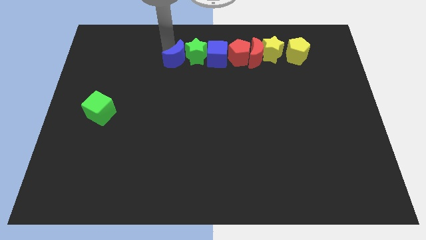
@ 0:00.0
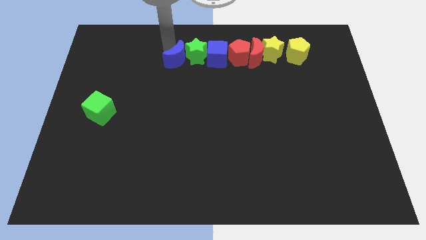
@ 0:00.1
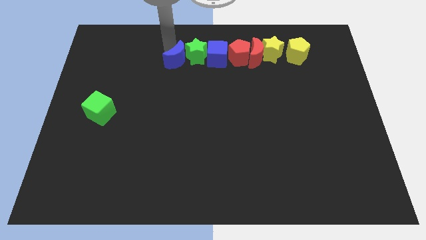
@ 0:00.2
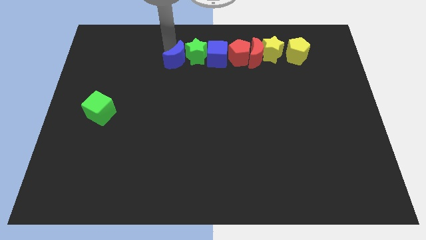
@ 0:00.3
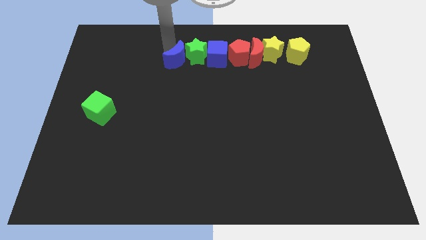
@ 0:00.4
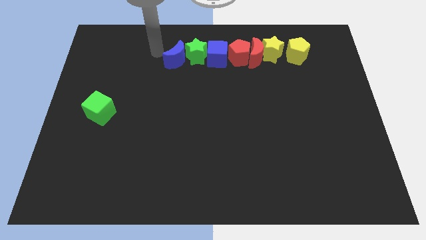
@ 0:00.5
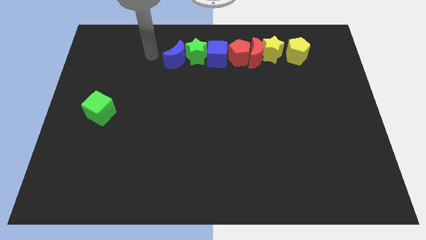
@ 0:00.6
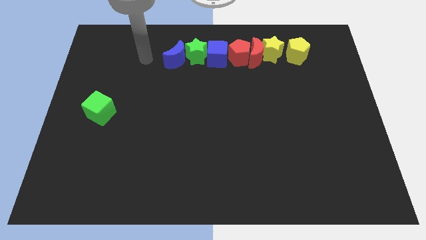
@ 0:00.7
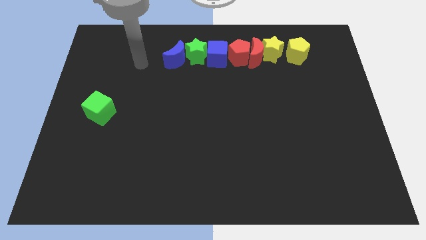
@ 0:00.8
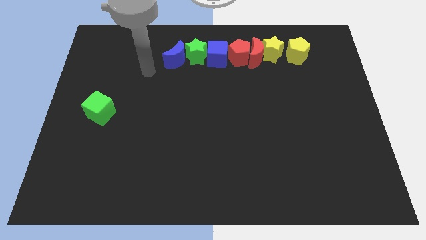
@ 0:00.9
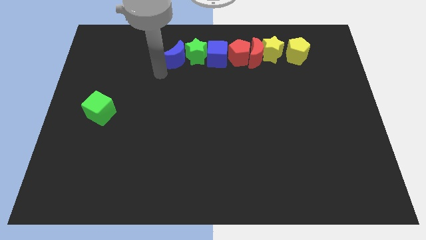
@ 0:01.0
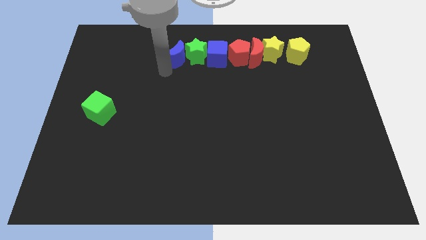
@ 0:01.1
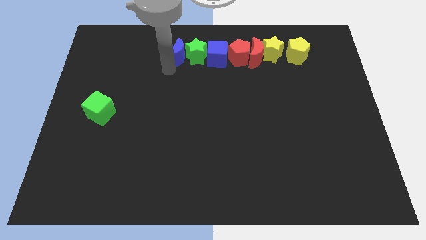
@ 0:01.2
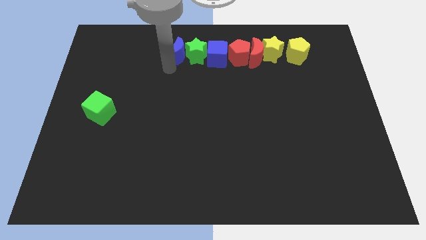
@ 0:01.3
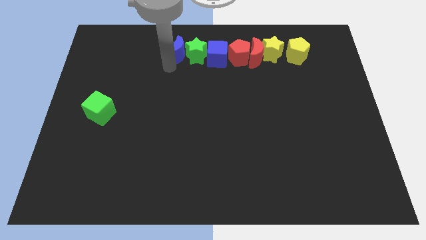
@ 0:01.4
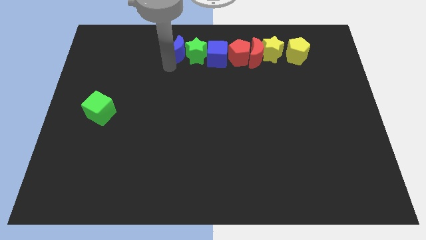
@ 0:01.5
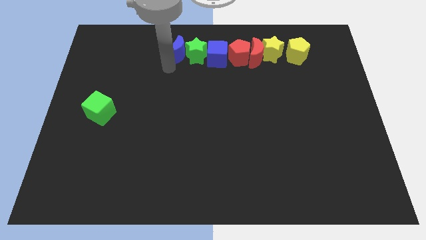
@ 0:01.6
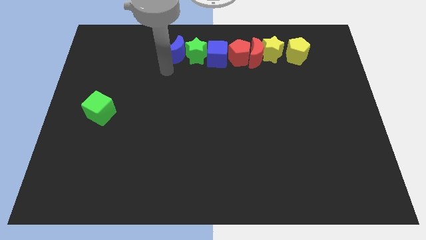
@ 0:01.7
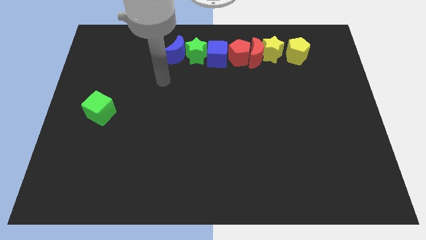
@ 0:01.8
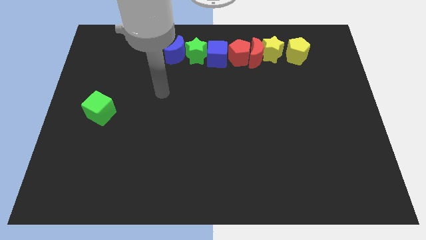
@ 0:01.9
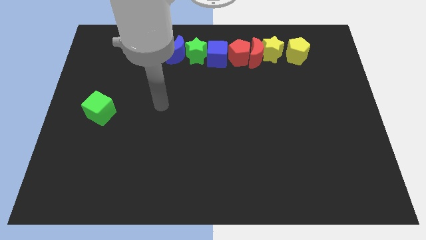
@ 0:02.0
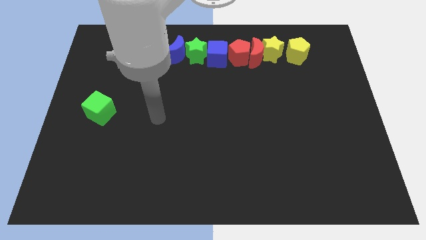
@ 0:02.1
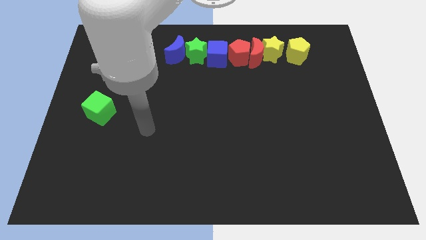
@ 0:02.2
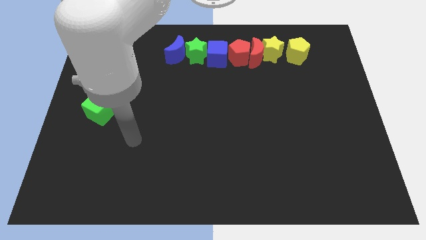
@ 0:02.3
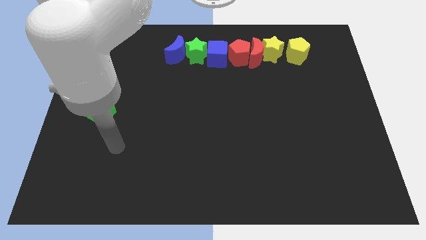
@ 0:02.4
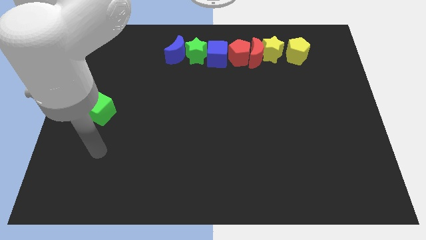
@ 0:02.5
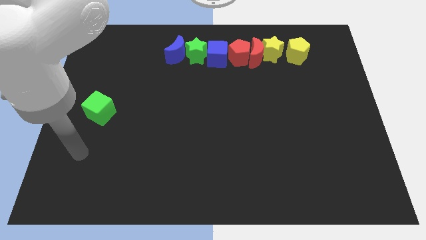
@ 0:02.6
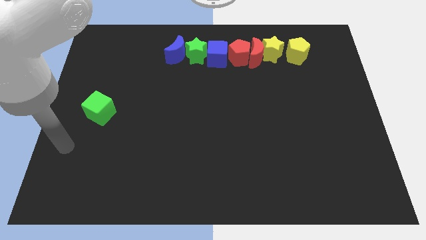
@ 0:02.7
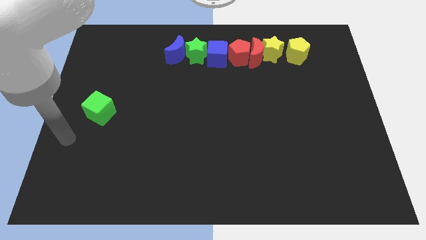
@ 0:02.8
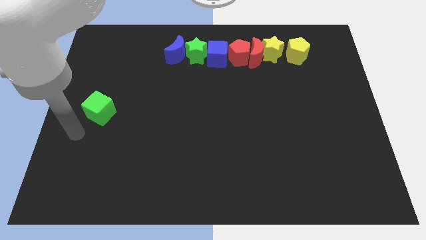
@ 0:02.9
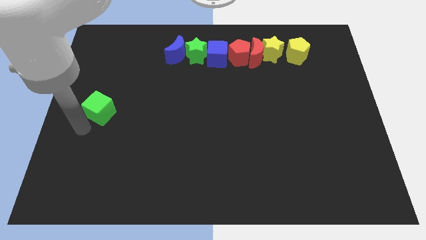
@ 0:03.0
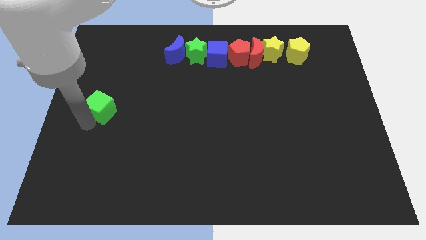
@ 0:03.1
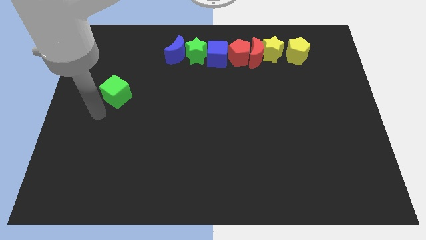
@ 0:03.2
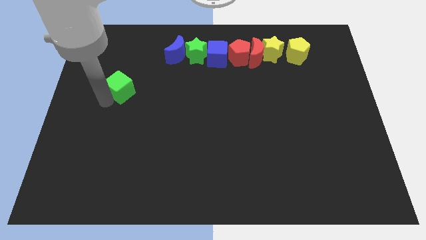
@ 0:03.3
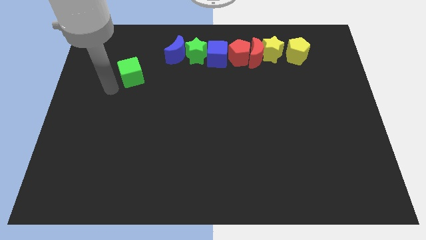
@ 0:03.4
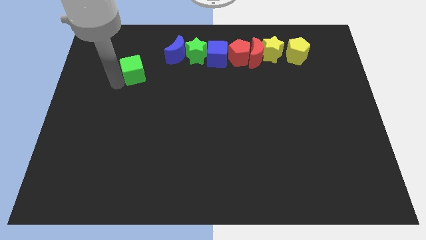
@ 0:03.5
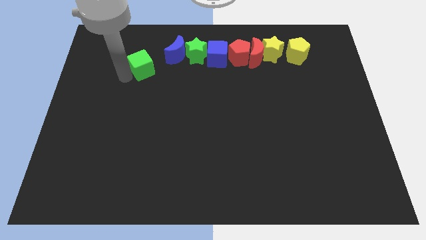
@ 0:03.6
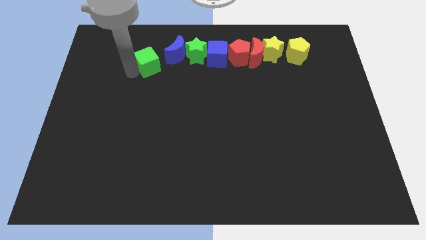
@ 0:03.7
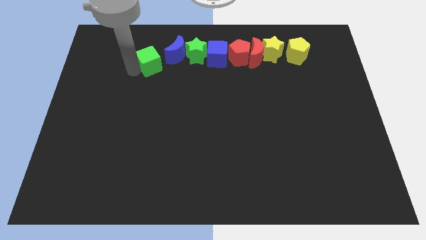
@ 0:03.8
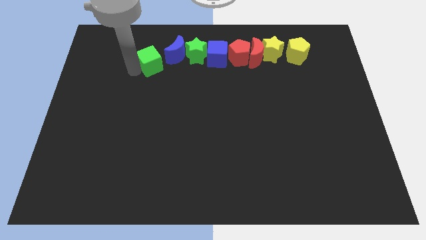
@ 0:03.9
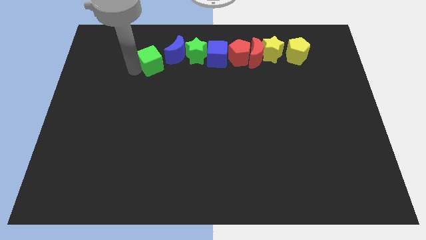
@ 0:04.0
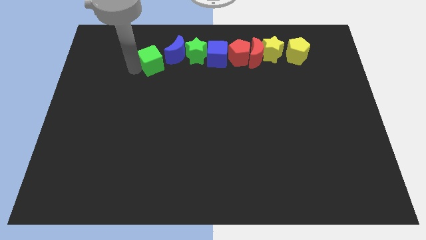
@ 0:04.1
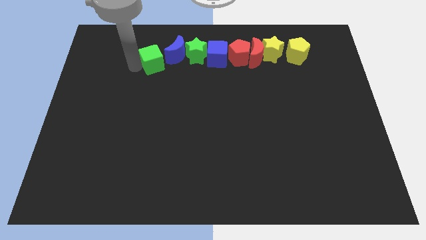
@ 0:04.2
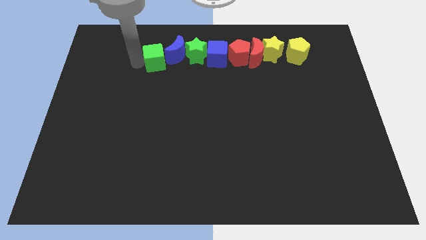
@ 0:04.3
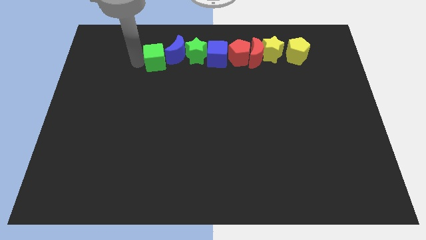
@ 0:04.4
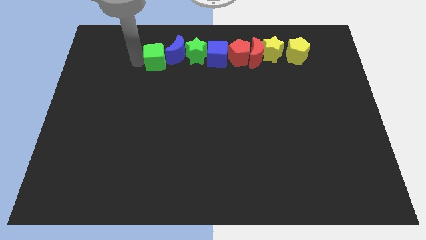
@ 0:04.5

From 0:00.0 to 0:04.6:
place the green cube towards the left side of the blue crescent

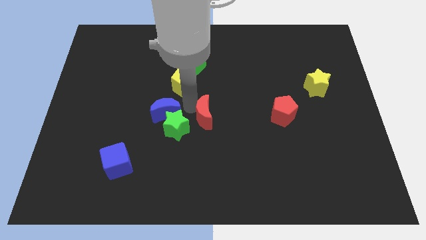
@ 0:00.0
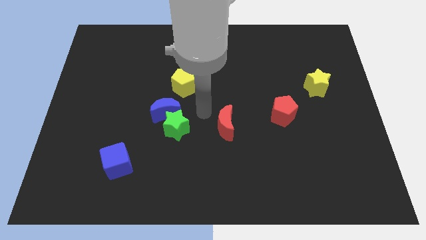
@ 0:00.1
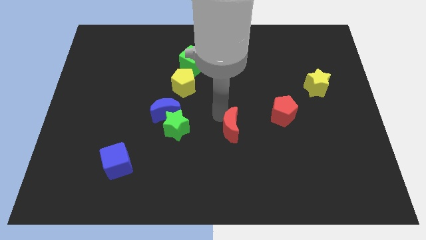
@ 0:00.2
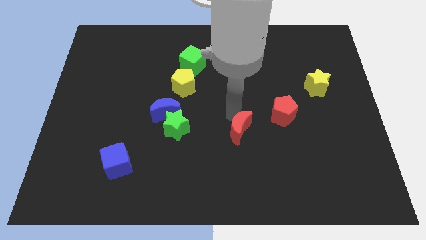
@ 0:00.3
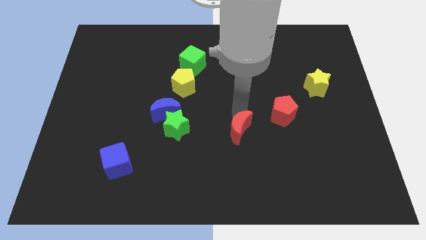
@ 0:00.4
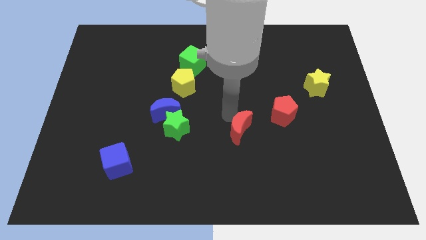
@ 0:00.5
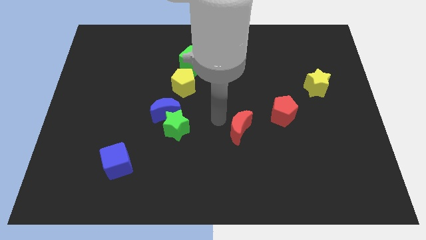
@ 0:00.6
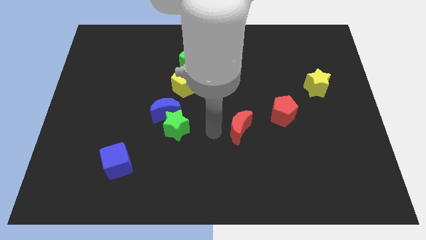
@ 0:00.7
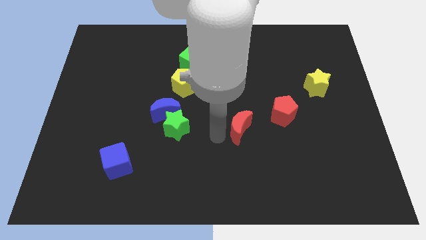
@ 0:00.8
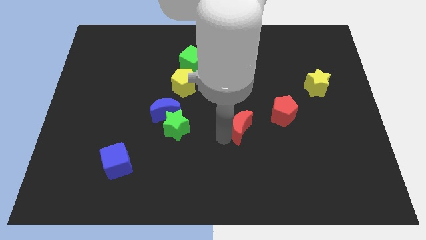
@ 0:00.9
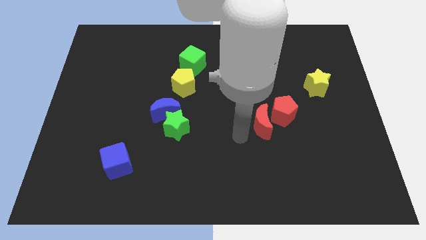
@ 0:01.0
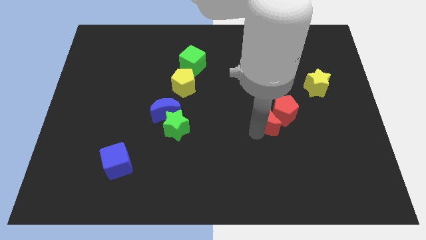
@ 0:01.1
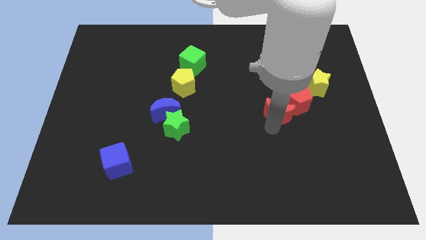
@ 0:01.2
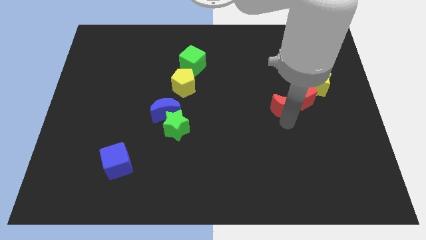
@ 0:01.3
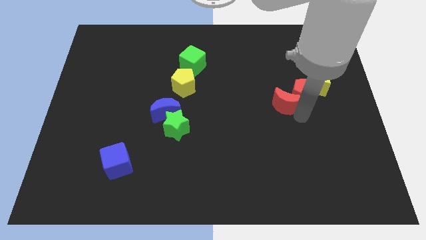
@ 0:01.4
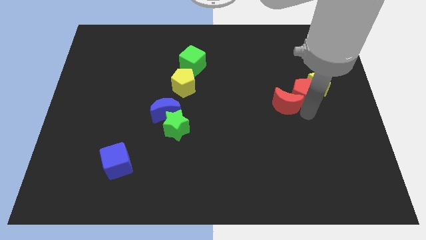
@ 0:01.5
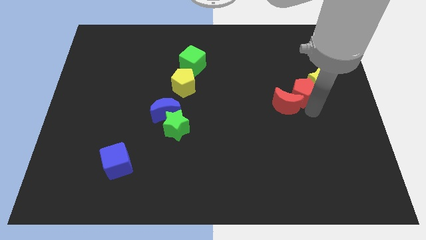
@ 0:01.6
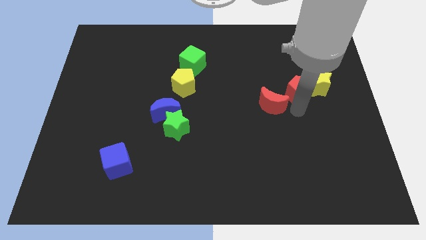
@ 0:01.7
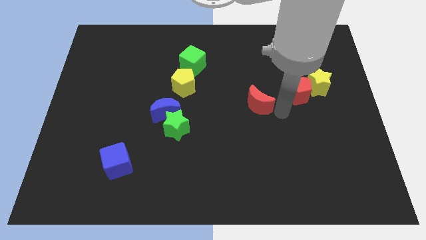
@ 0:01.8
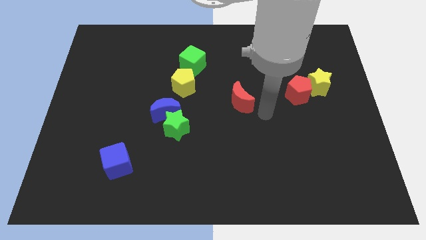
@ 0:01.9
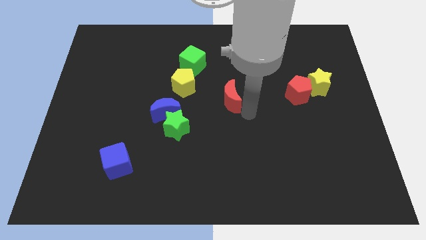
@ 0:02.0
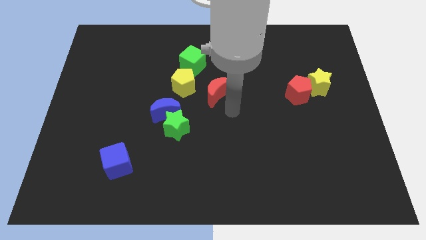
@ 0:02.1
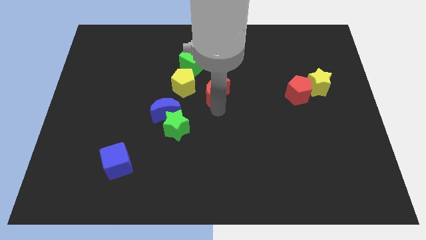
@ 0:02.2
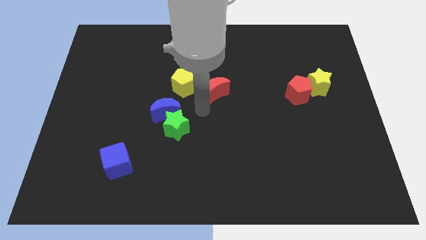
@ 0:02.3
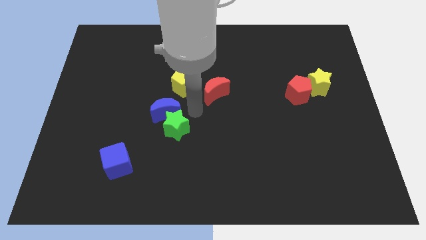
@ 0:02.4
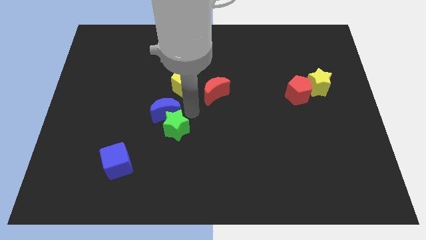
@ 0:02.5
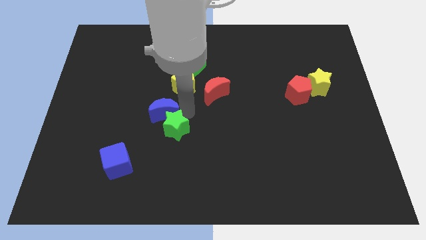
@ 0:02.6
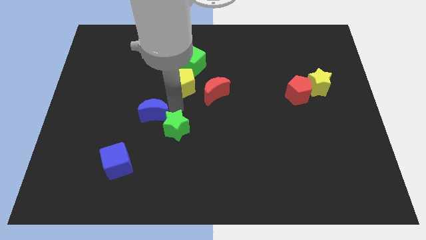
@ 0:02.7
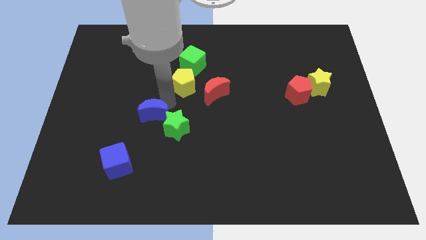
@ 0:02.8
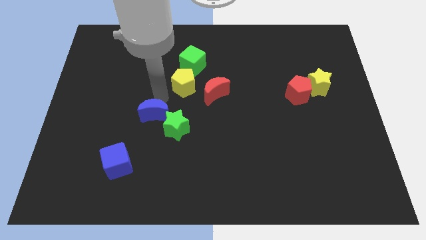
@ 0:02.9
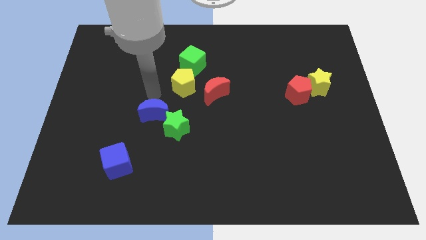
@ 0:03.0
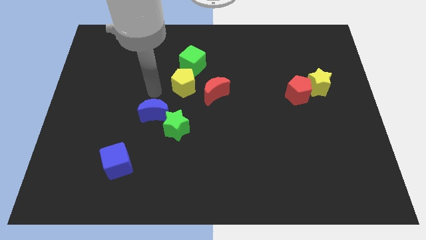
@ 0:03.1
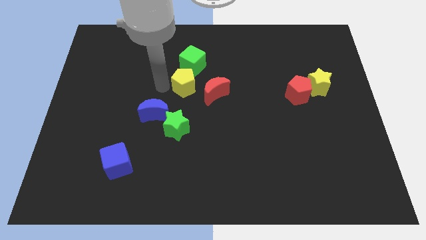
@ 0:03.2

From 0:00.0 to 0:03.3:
push the red moon to the right side of the yellow pentagon

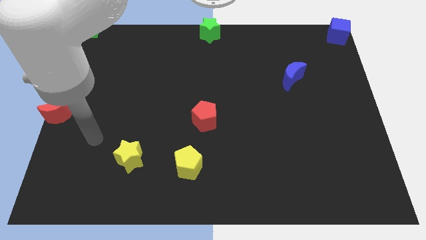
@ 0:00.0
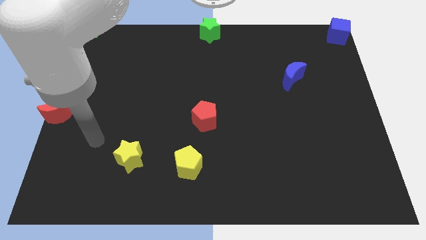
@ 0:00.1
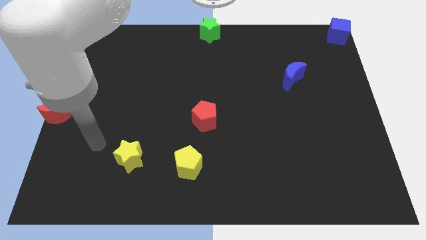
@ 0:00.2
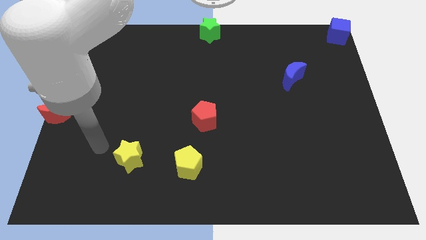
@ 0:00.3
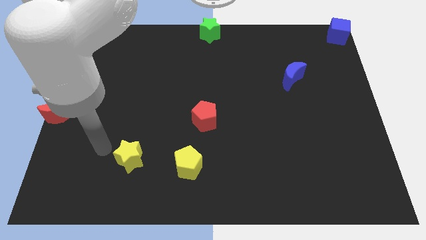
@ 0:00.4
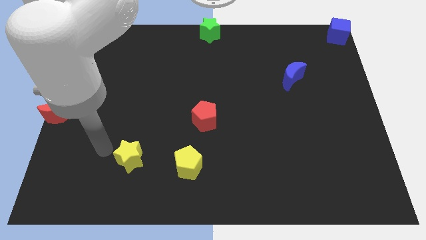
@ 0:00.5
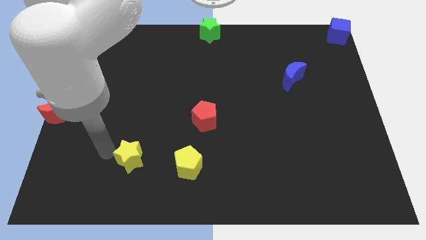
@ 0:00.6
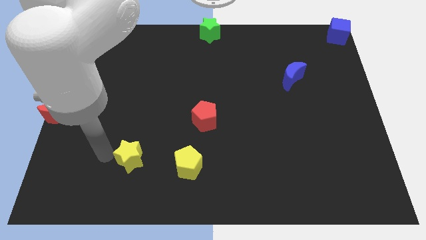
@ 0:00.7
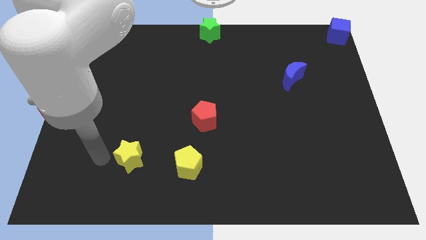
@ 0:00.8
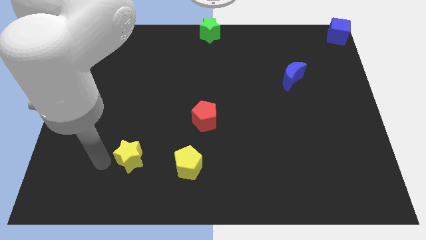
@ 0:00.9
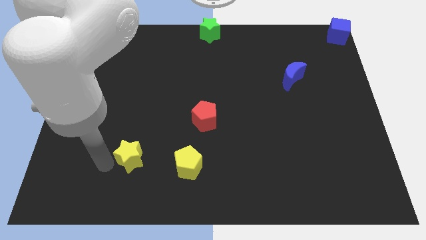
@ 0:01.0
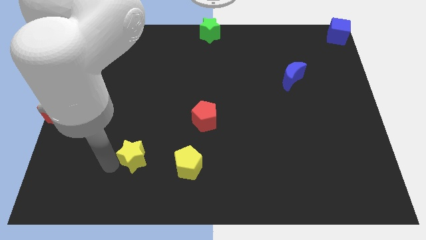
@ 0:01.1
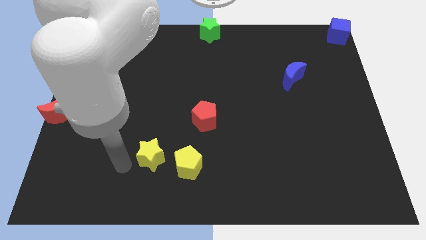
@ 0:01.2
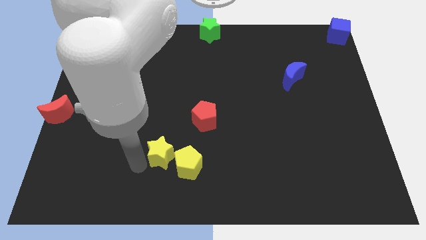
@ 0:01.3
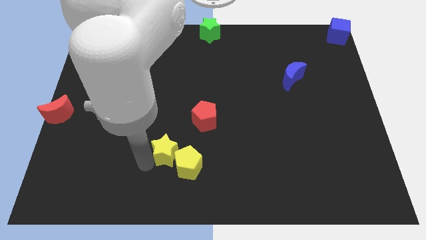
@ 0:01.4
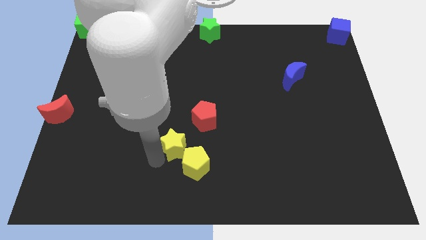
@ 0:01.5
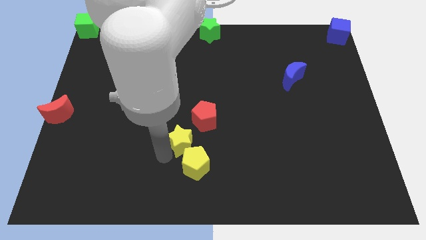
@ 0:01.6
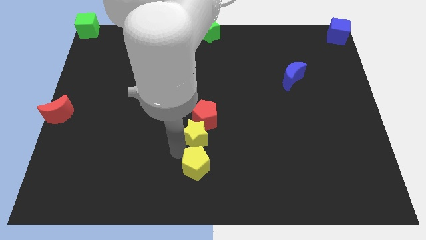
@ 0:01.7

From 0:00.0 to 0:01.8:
move the yellow star in between the red pentagon and yellow pentagon
